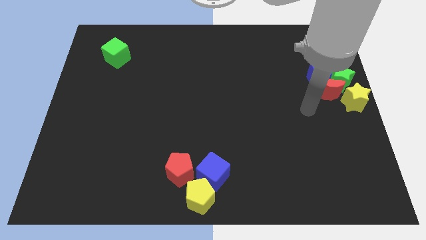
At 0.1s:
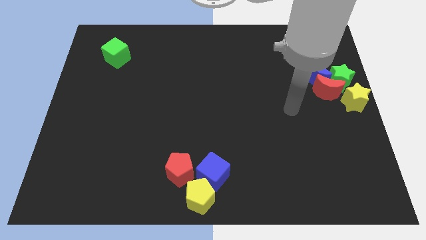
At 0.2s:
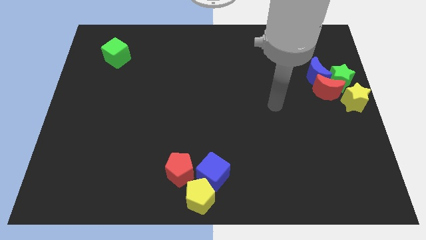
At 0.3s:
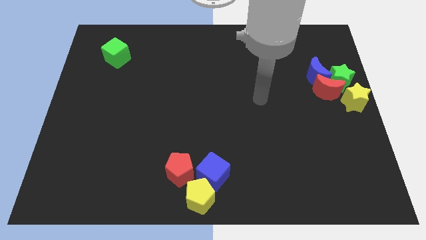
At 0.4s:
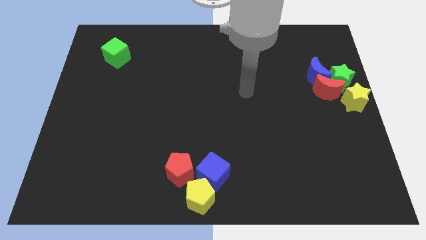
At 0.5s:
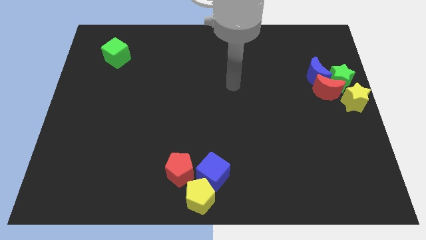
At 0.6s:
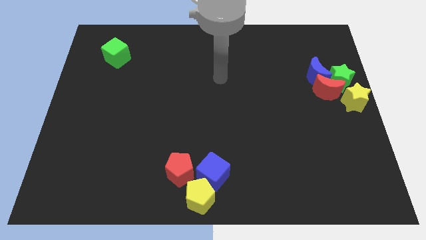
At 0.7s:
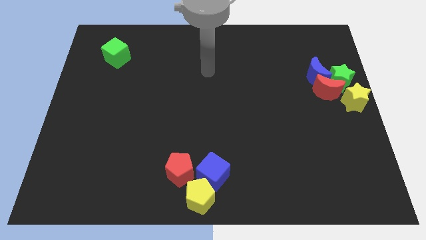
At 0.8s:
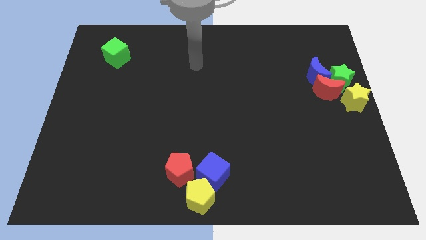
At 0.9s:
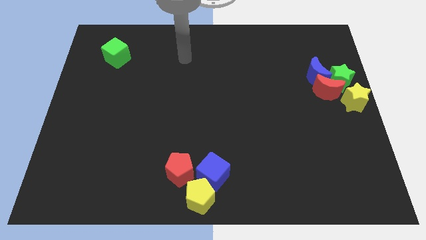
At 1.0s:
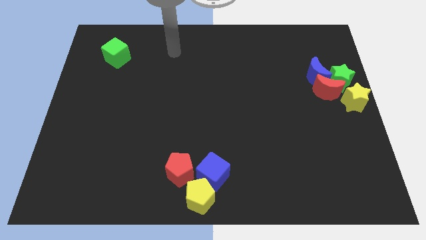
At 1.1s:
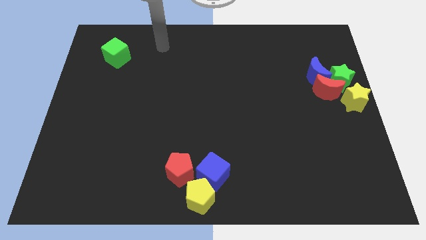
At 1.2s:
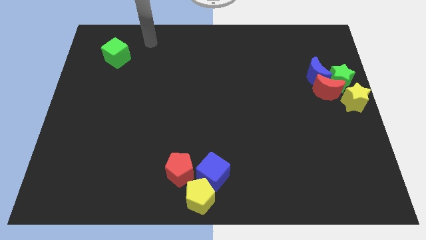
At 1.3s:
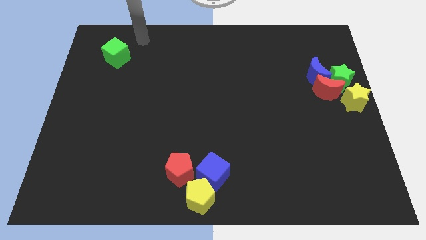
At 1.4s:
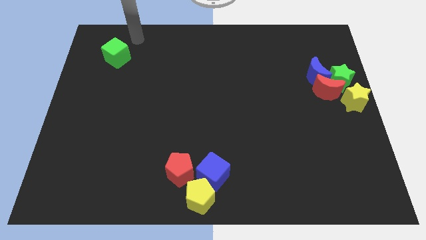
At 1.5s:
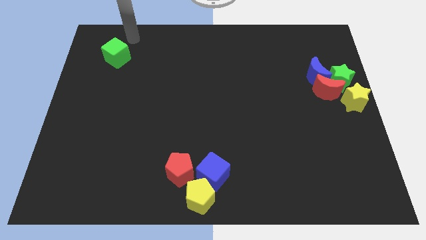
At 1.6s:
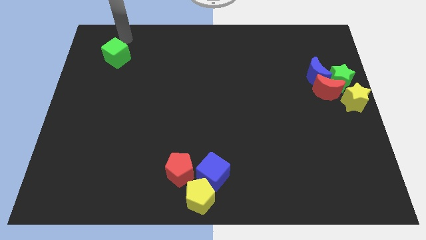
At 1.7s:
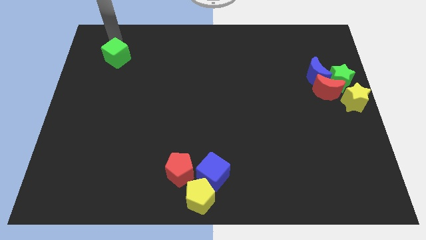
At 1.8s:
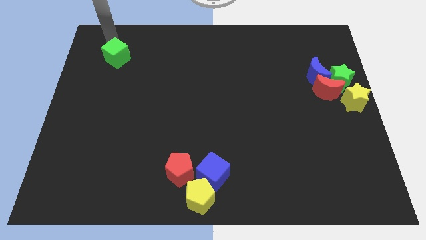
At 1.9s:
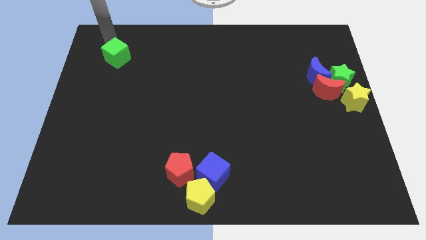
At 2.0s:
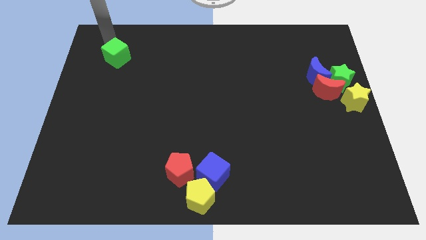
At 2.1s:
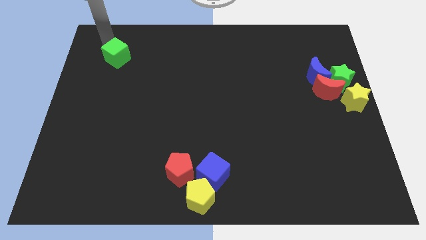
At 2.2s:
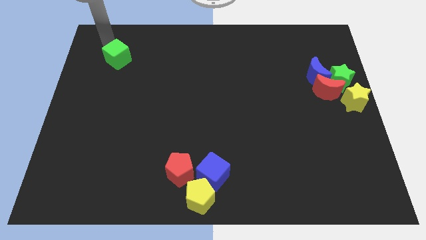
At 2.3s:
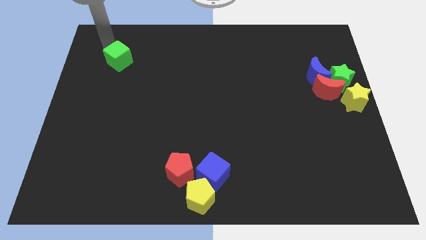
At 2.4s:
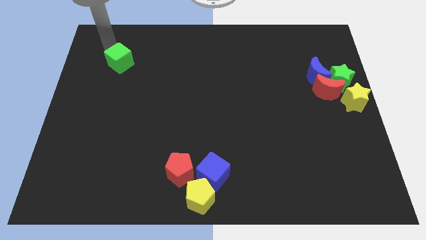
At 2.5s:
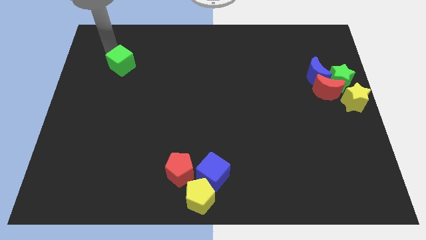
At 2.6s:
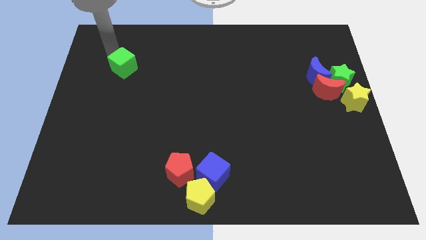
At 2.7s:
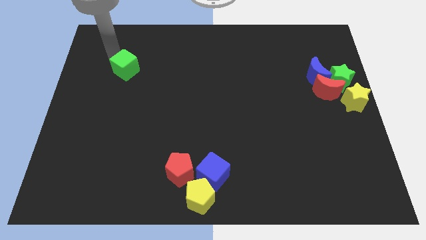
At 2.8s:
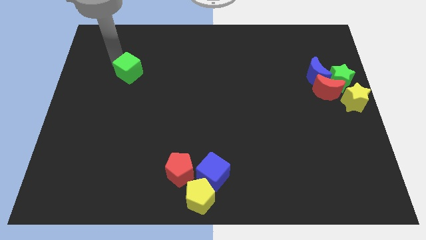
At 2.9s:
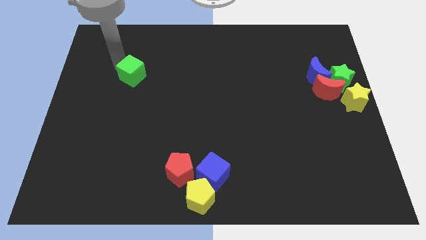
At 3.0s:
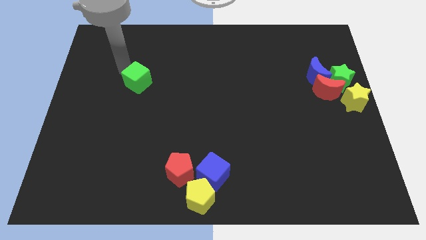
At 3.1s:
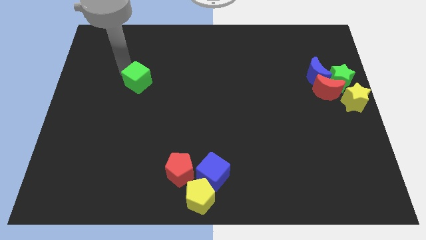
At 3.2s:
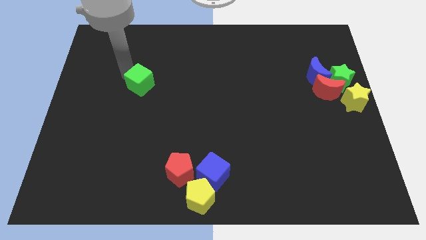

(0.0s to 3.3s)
slide the green cube slightly towards the blocks at the bottom center of the board

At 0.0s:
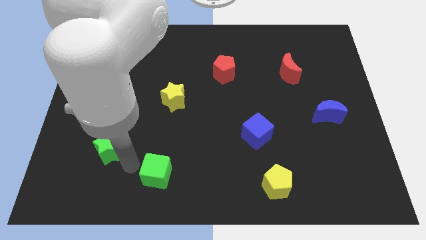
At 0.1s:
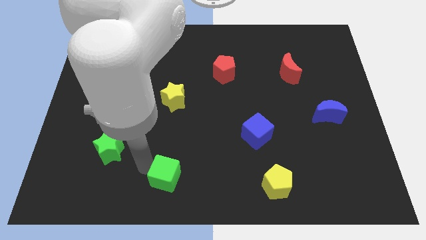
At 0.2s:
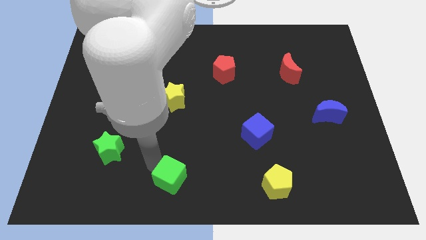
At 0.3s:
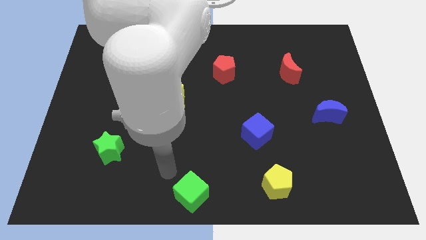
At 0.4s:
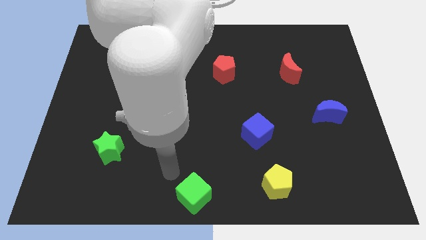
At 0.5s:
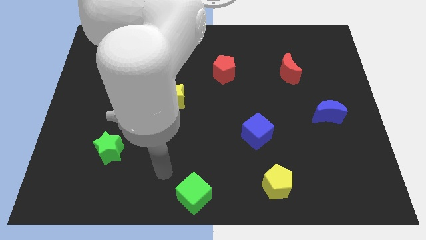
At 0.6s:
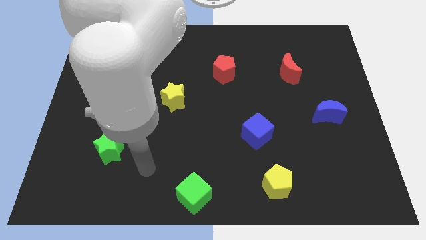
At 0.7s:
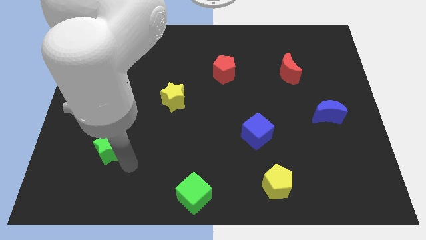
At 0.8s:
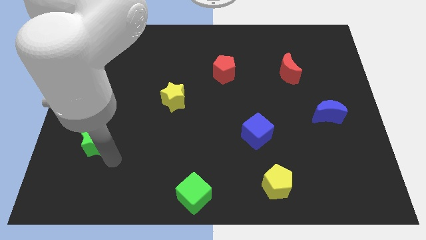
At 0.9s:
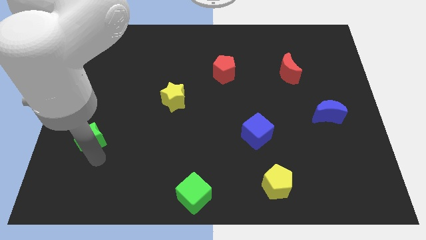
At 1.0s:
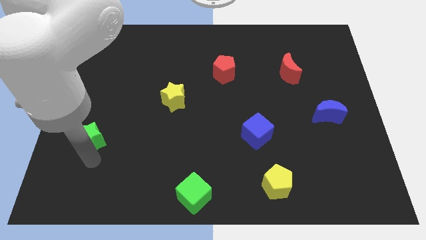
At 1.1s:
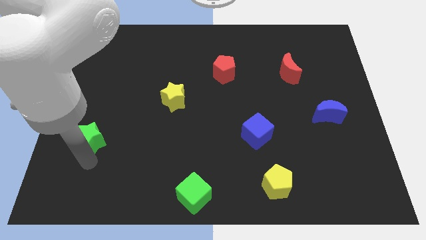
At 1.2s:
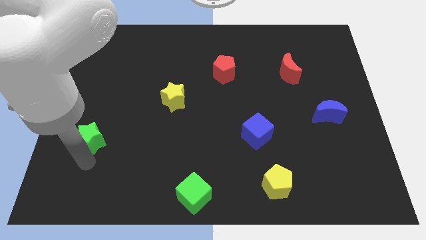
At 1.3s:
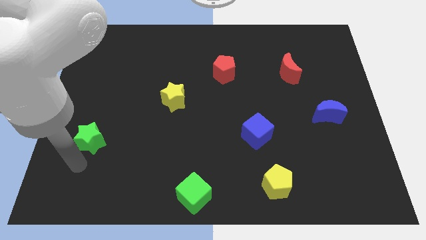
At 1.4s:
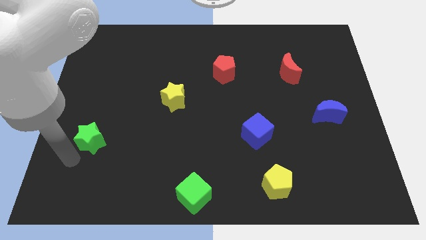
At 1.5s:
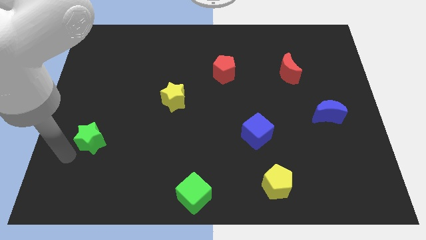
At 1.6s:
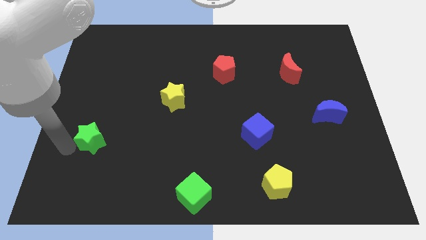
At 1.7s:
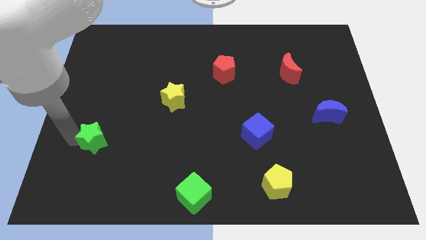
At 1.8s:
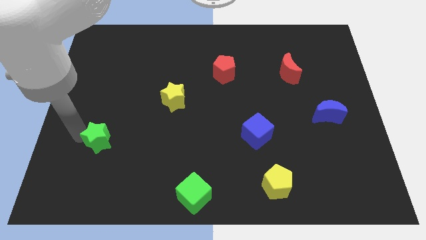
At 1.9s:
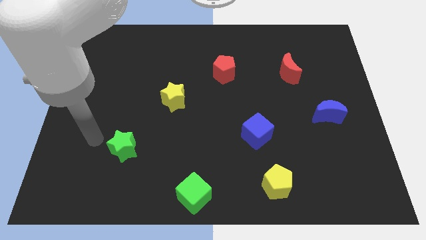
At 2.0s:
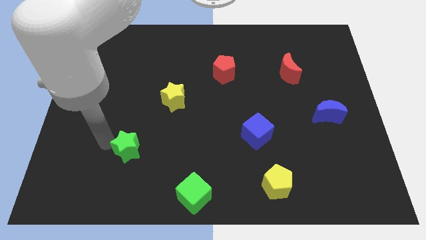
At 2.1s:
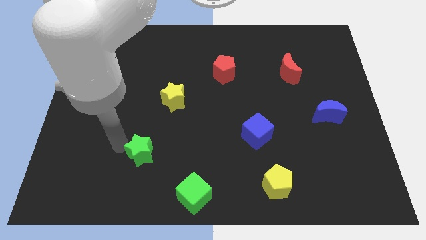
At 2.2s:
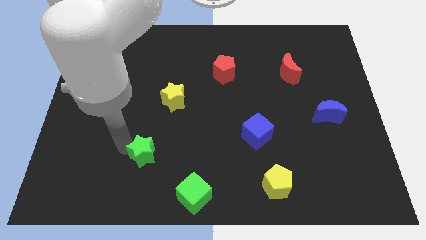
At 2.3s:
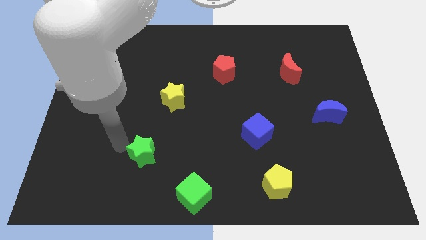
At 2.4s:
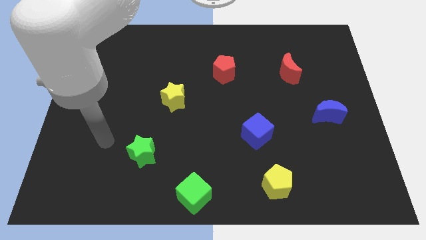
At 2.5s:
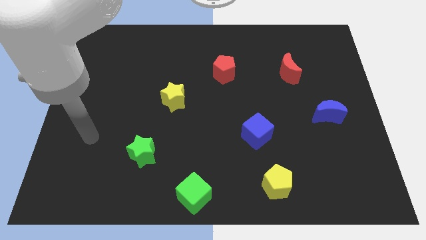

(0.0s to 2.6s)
place the green star diagonally top left to the green cube

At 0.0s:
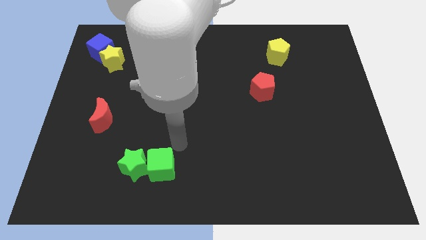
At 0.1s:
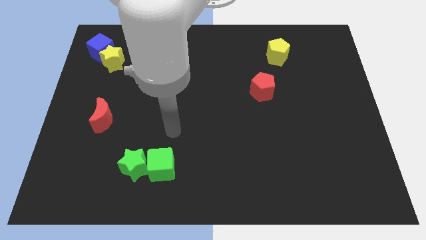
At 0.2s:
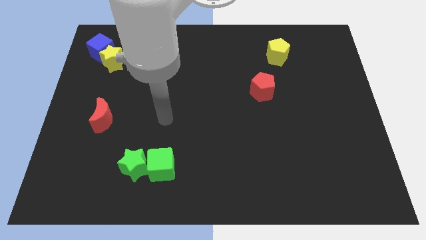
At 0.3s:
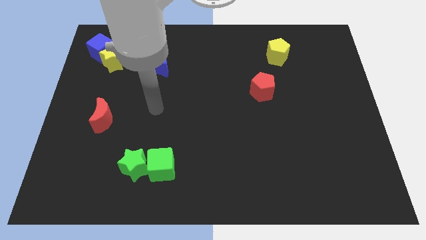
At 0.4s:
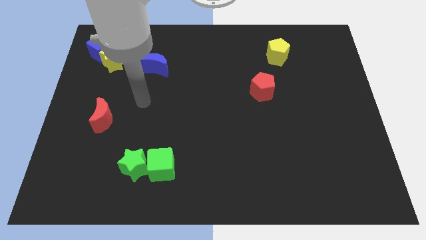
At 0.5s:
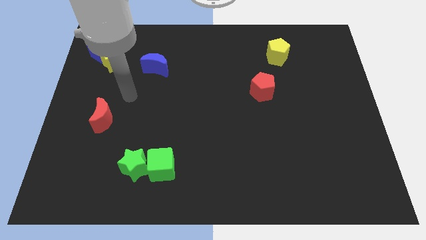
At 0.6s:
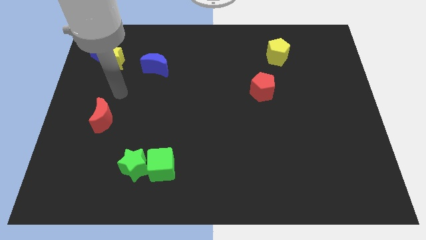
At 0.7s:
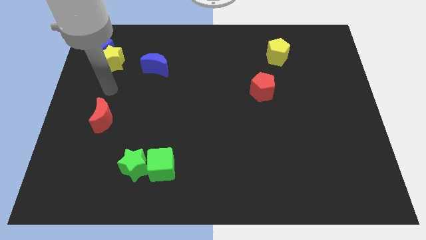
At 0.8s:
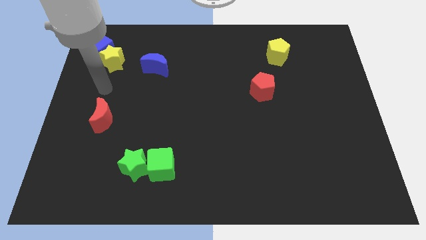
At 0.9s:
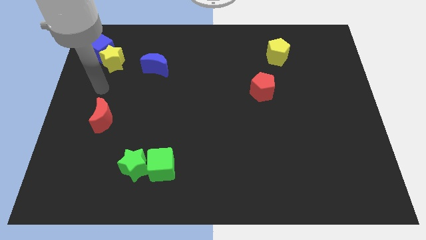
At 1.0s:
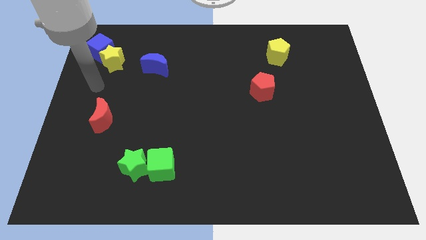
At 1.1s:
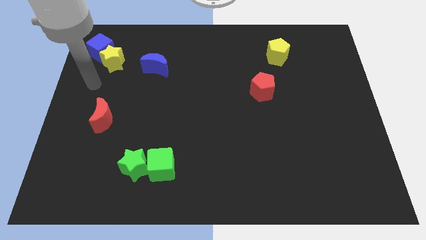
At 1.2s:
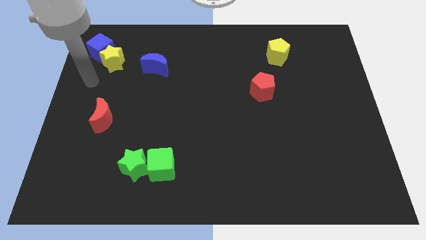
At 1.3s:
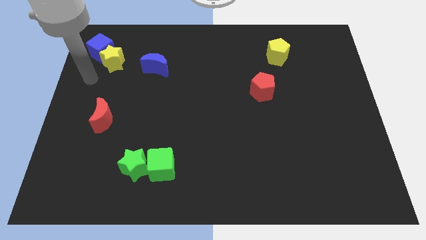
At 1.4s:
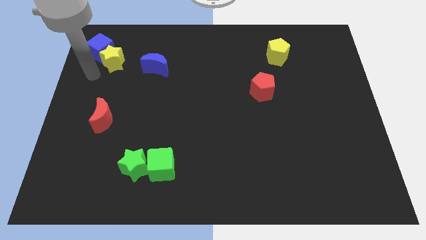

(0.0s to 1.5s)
move your arm to the bottom of blue cube

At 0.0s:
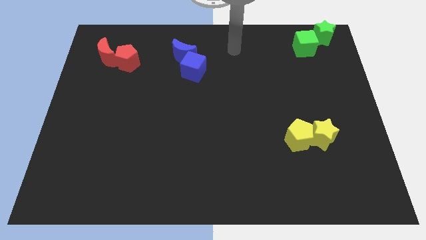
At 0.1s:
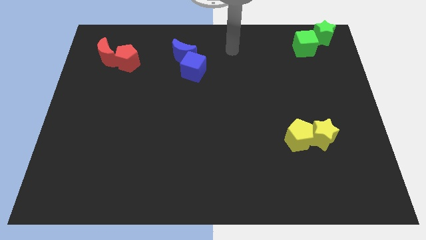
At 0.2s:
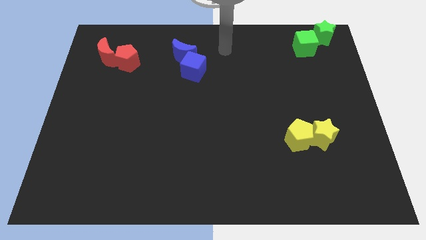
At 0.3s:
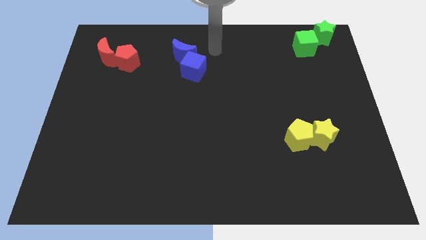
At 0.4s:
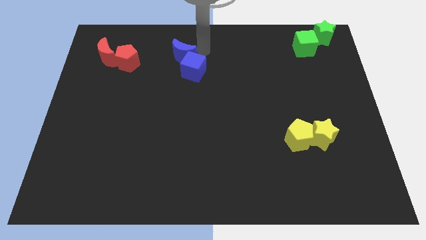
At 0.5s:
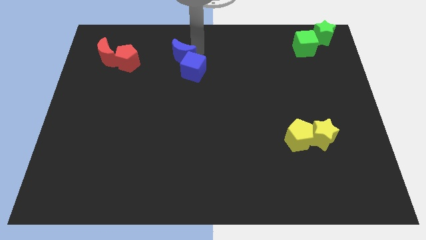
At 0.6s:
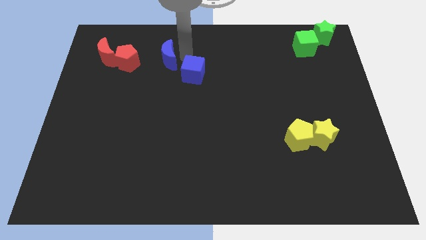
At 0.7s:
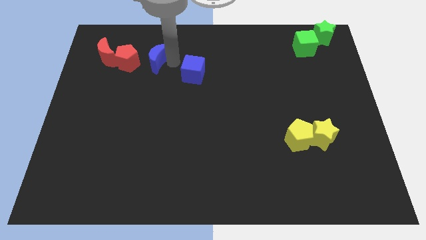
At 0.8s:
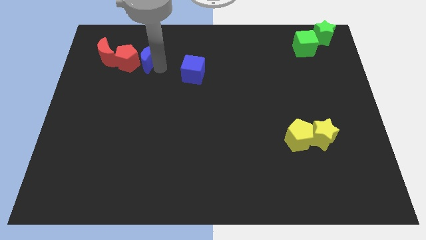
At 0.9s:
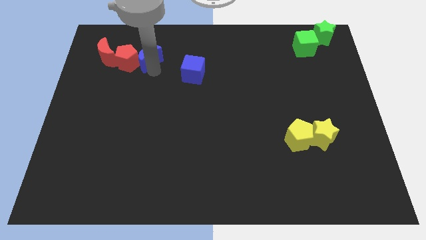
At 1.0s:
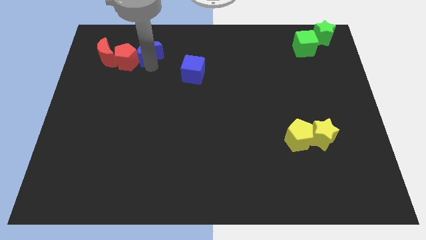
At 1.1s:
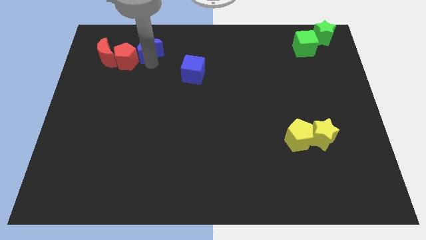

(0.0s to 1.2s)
place the blue crescent into the red pentagon

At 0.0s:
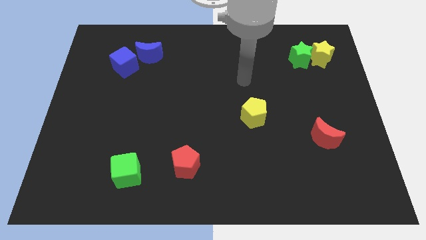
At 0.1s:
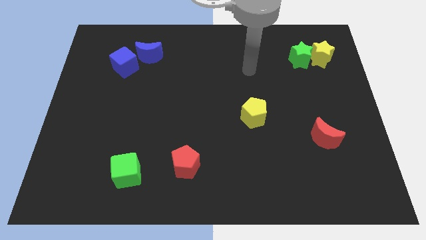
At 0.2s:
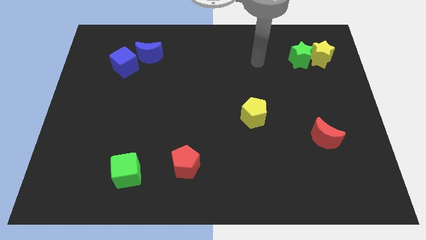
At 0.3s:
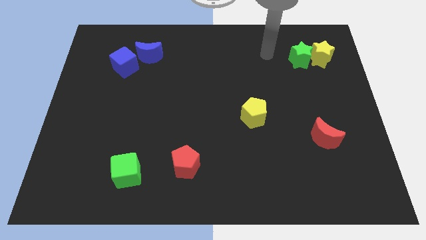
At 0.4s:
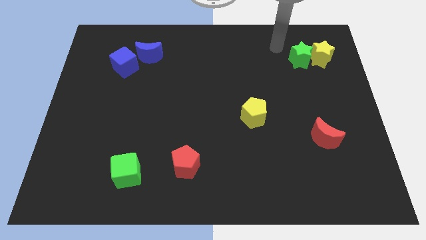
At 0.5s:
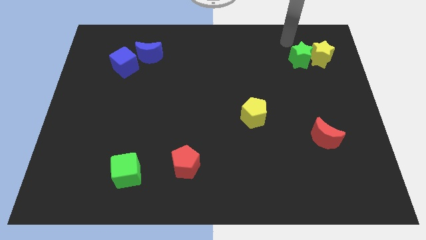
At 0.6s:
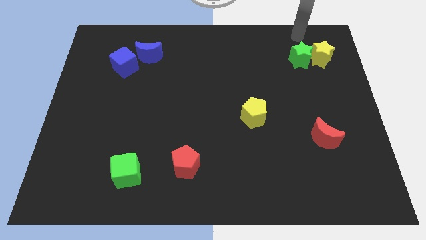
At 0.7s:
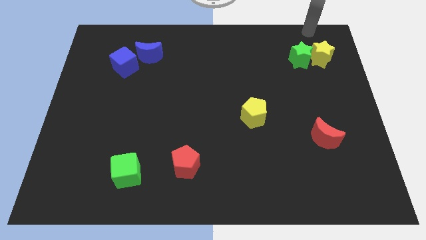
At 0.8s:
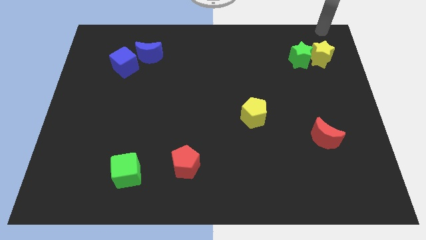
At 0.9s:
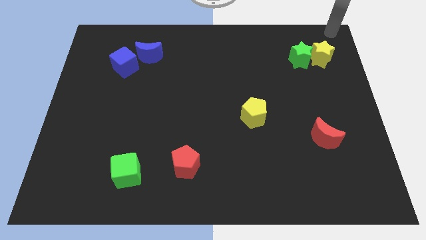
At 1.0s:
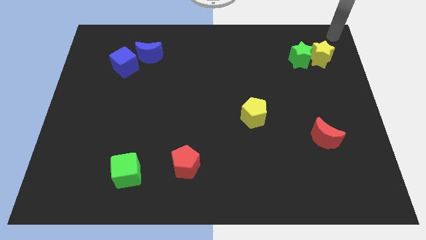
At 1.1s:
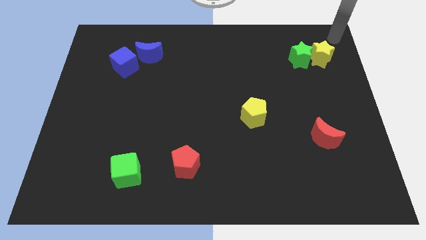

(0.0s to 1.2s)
place arm at top right corner
